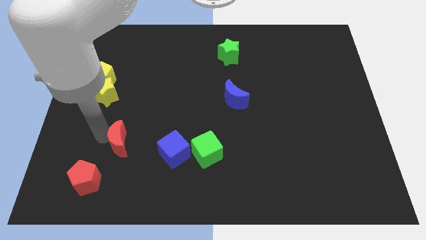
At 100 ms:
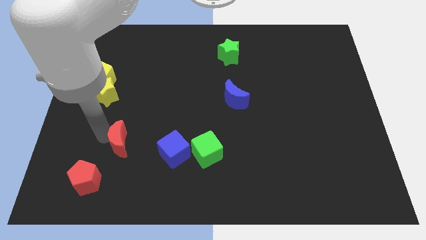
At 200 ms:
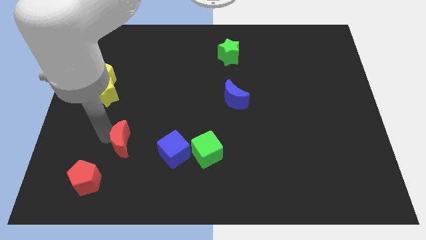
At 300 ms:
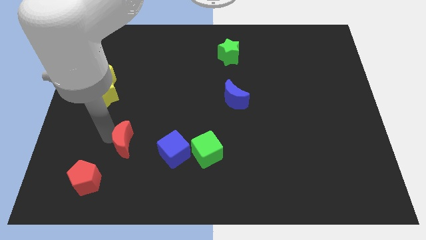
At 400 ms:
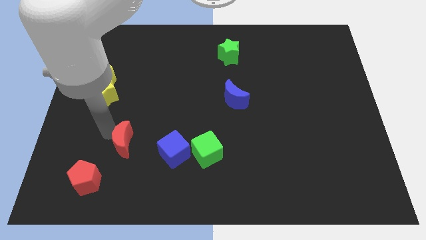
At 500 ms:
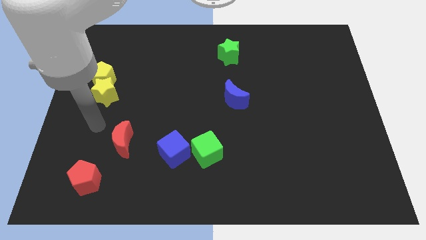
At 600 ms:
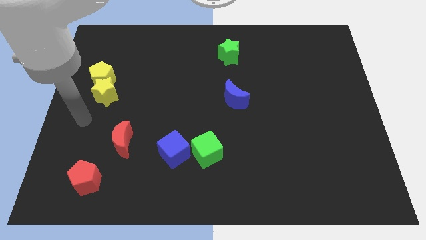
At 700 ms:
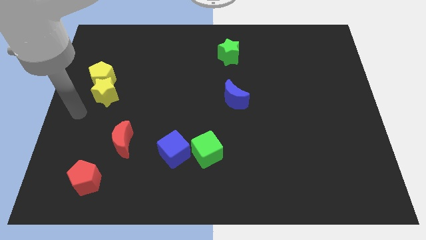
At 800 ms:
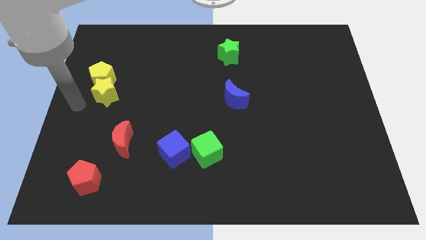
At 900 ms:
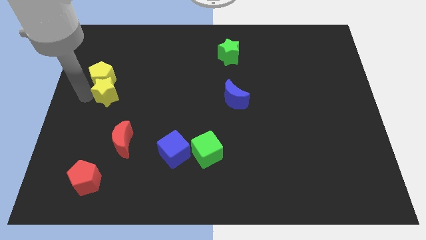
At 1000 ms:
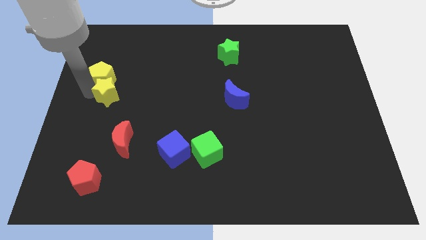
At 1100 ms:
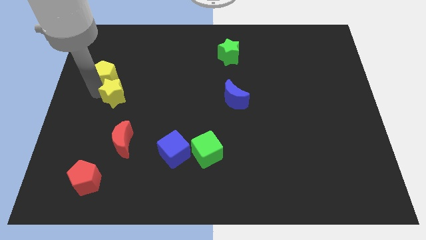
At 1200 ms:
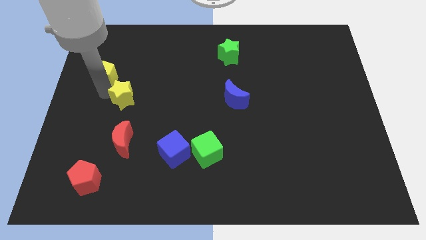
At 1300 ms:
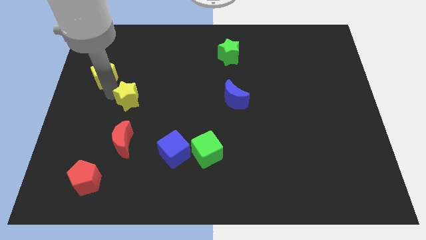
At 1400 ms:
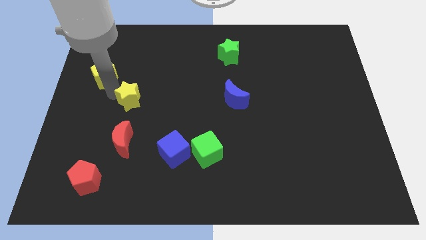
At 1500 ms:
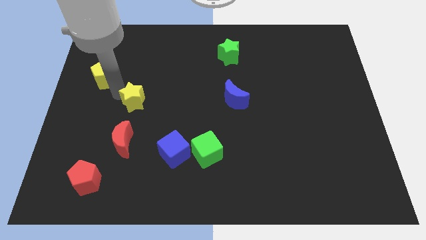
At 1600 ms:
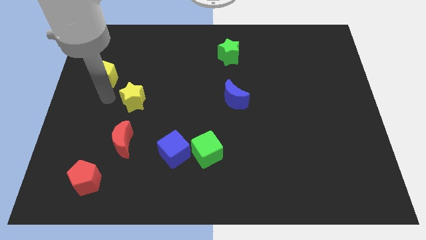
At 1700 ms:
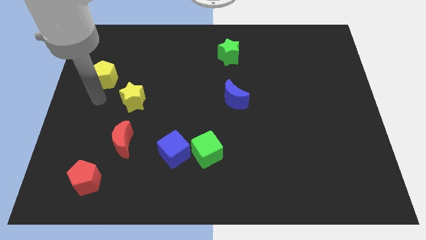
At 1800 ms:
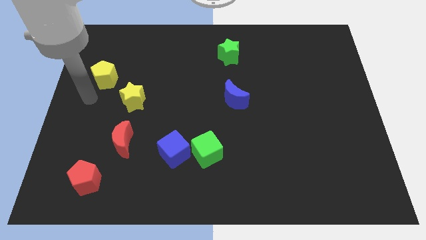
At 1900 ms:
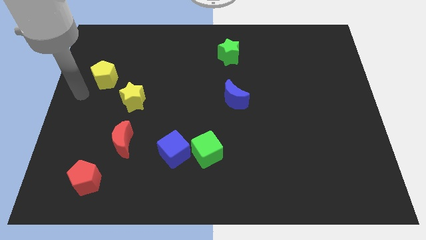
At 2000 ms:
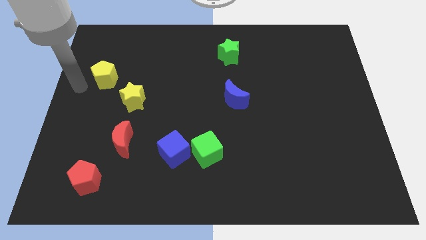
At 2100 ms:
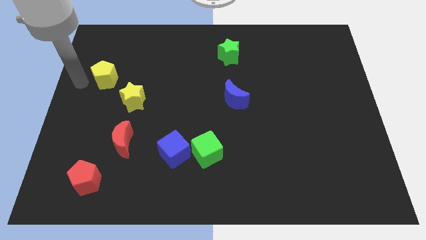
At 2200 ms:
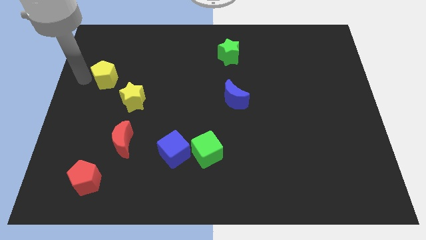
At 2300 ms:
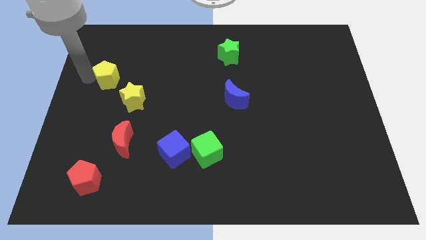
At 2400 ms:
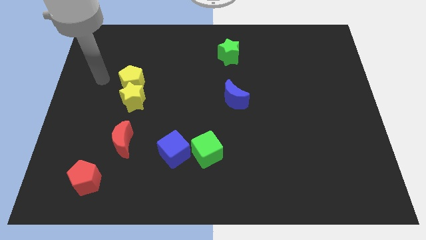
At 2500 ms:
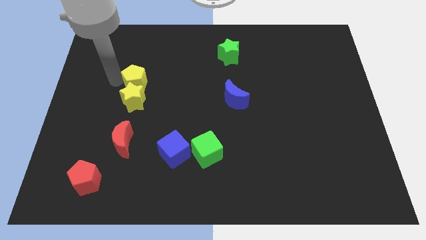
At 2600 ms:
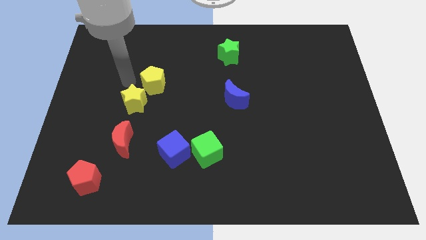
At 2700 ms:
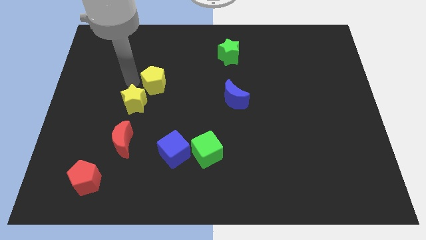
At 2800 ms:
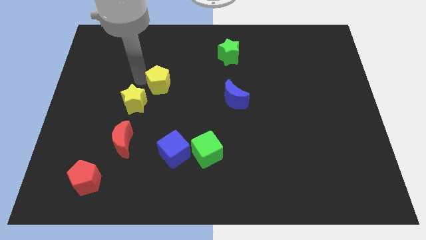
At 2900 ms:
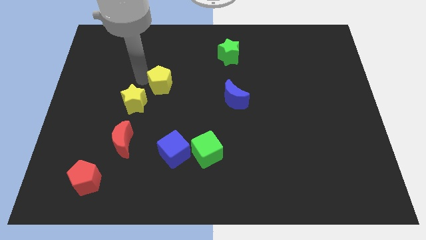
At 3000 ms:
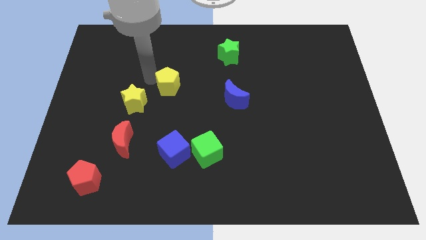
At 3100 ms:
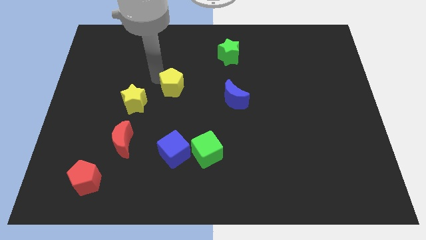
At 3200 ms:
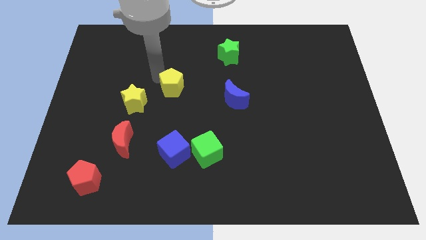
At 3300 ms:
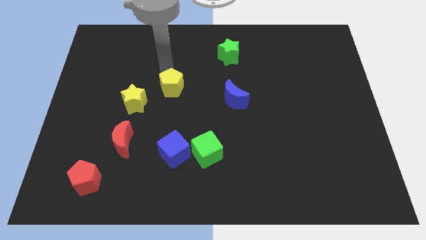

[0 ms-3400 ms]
place yellow pentagon above blue cube

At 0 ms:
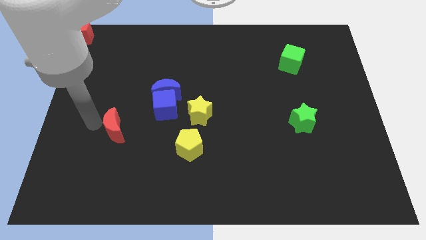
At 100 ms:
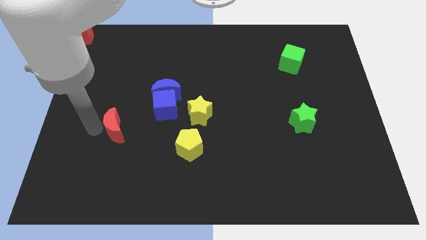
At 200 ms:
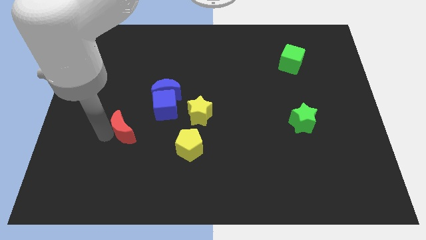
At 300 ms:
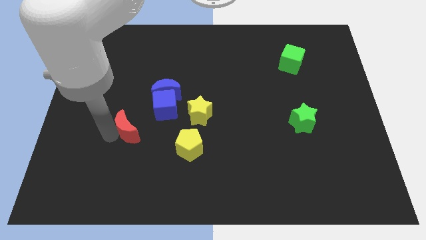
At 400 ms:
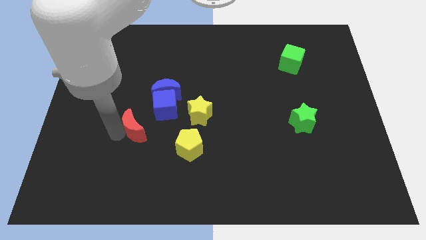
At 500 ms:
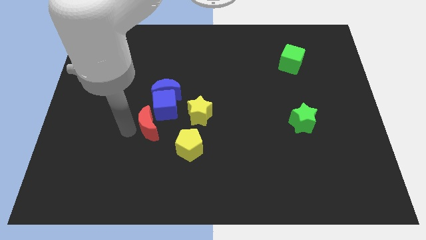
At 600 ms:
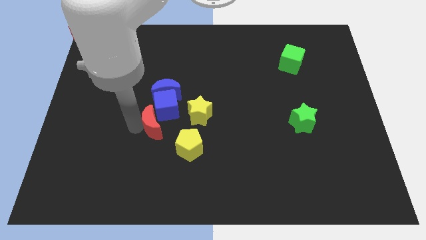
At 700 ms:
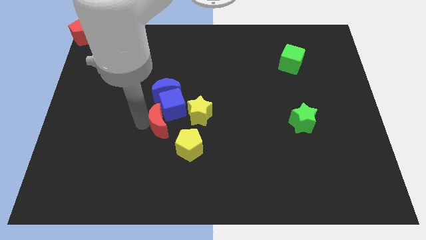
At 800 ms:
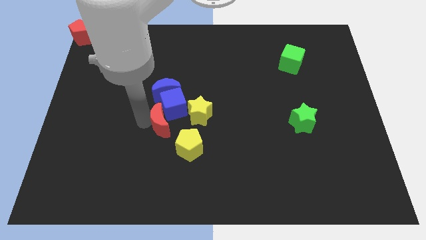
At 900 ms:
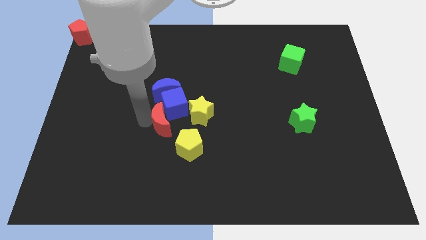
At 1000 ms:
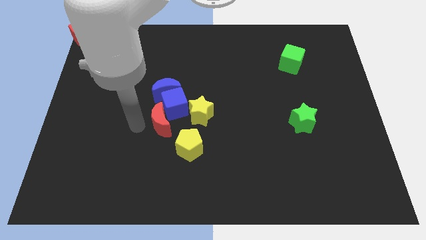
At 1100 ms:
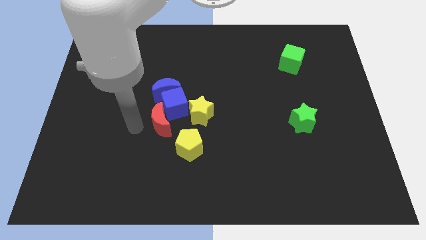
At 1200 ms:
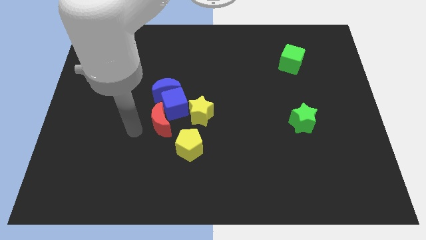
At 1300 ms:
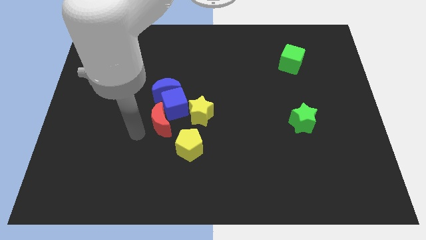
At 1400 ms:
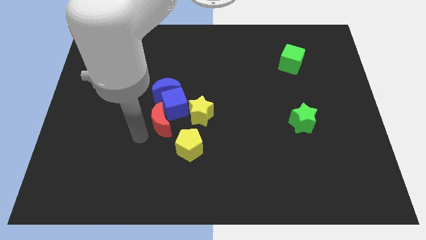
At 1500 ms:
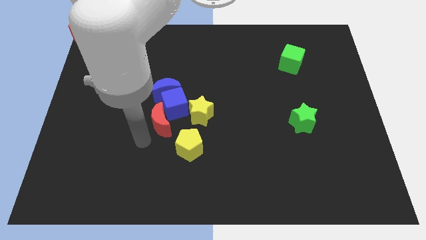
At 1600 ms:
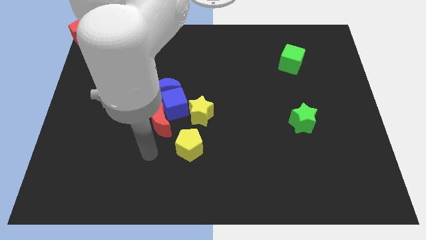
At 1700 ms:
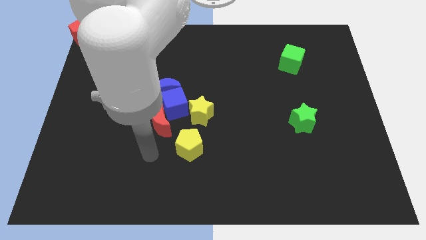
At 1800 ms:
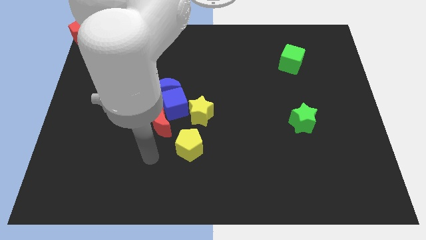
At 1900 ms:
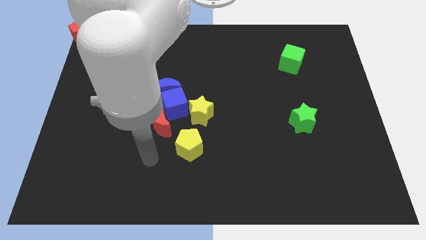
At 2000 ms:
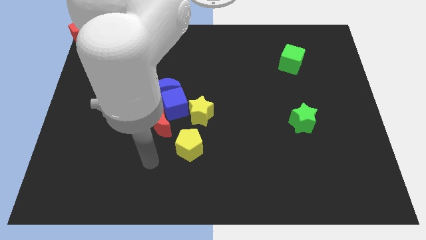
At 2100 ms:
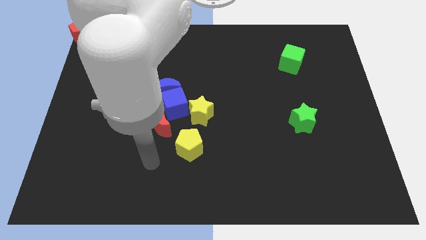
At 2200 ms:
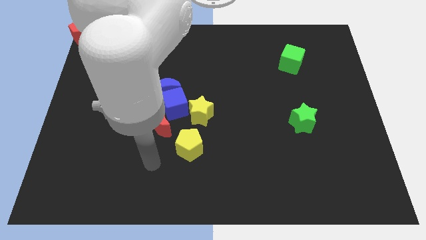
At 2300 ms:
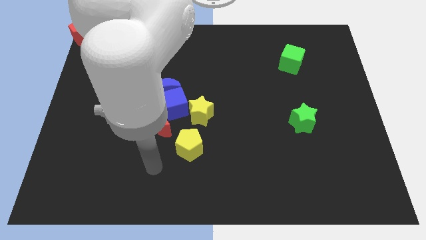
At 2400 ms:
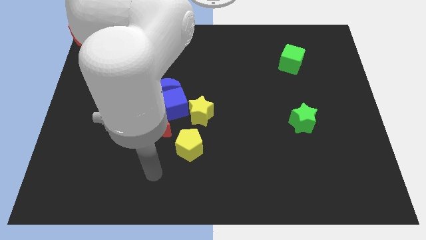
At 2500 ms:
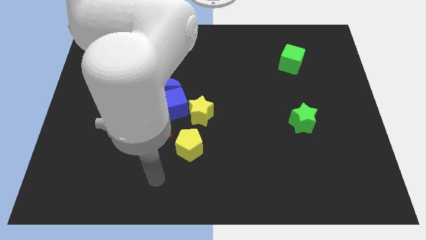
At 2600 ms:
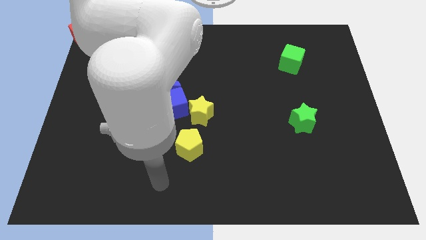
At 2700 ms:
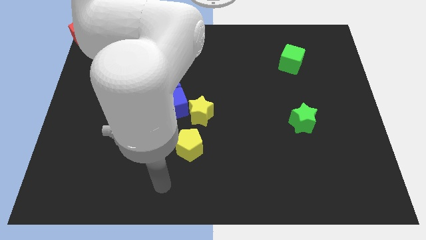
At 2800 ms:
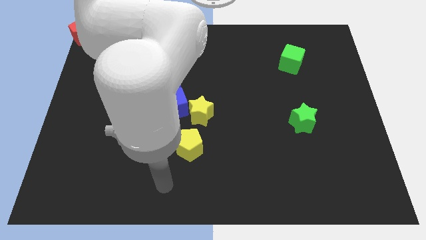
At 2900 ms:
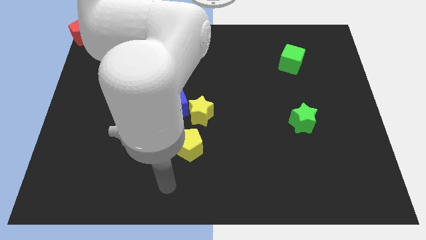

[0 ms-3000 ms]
push the red crescent into blue cube

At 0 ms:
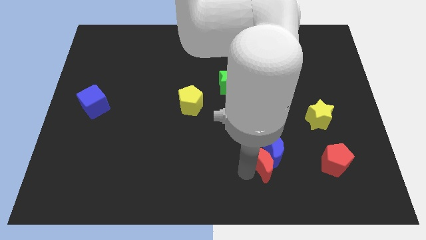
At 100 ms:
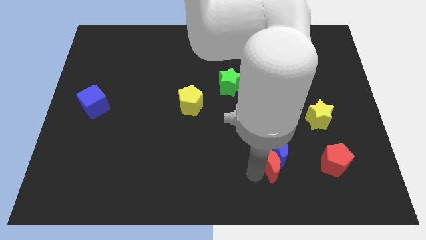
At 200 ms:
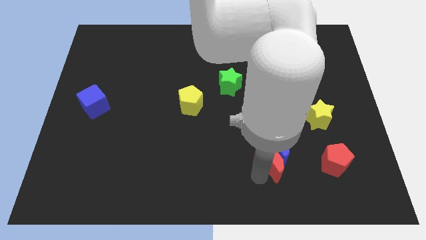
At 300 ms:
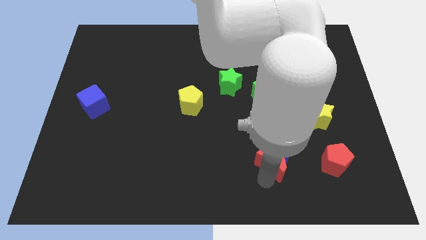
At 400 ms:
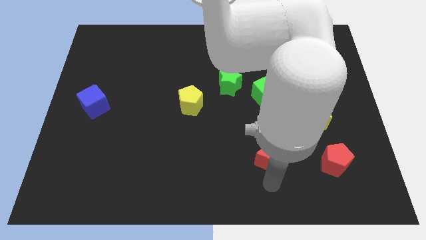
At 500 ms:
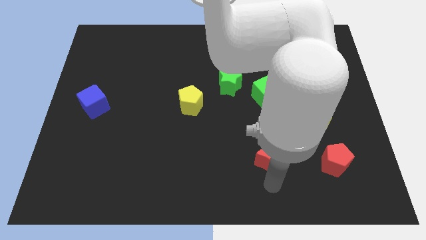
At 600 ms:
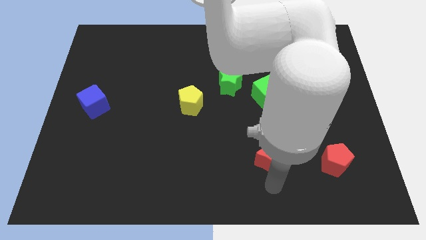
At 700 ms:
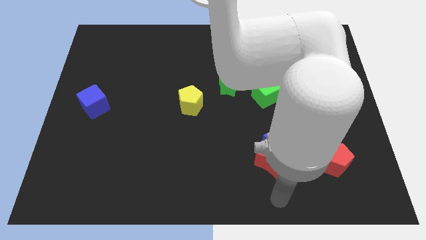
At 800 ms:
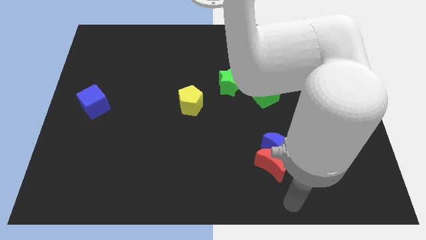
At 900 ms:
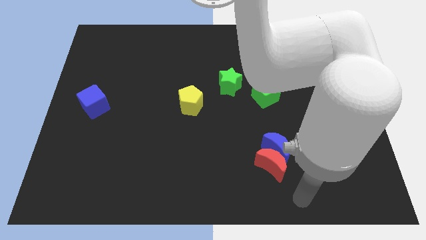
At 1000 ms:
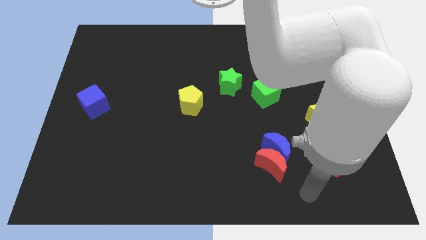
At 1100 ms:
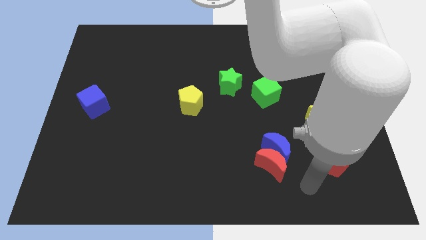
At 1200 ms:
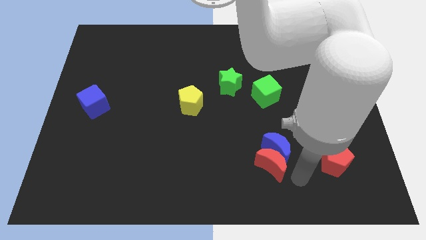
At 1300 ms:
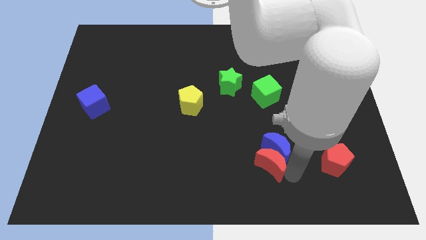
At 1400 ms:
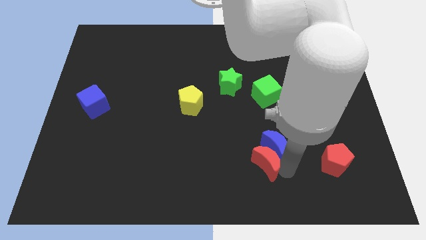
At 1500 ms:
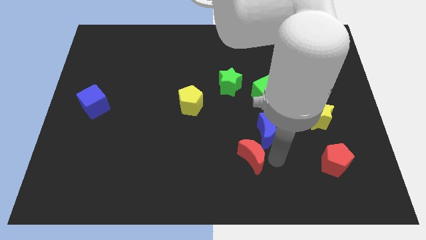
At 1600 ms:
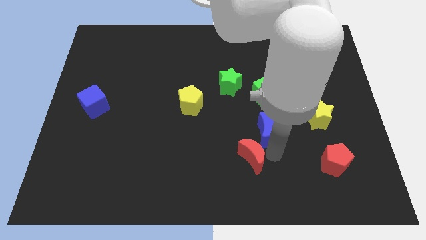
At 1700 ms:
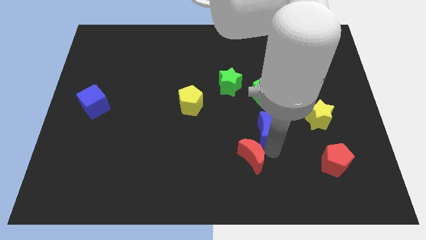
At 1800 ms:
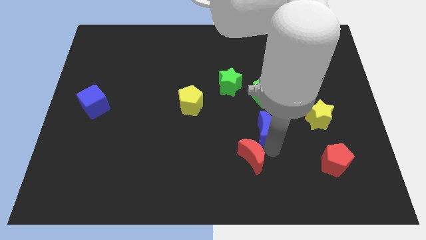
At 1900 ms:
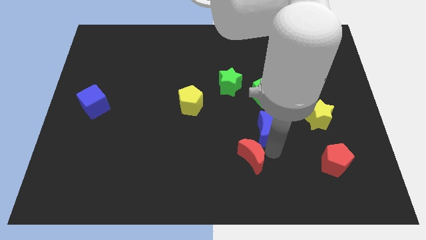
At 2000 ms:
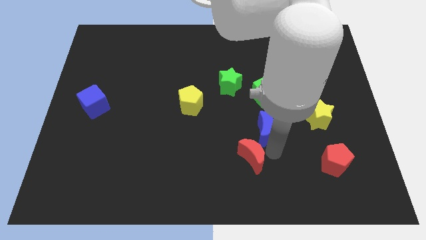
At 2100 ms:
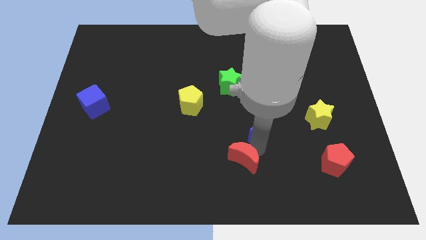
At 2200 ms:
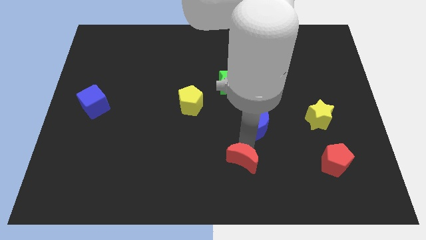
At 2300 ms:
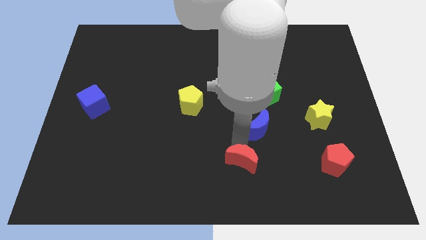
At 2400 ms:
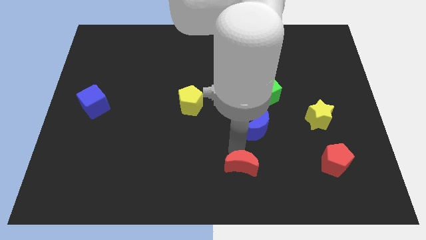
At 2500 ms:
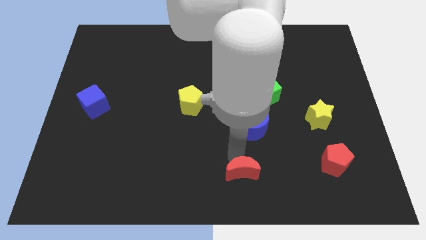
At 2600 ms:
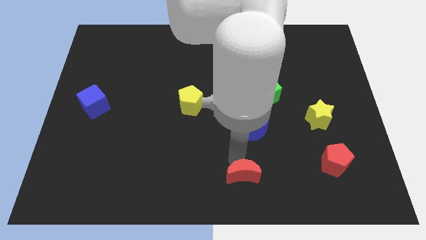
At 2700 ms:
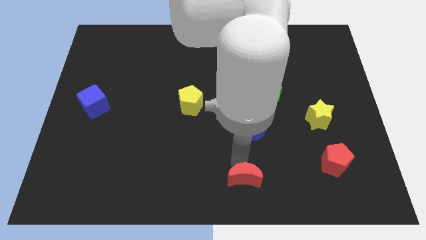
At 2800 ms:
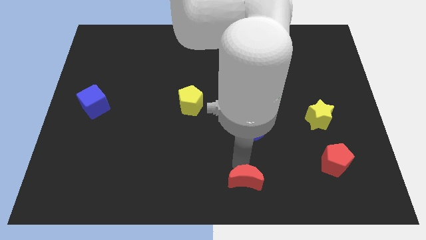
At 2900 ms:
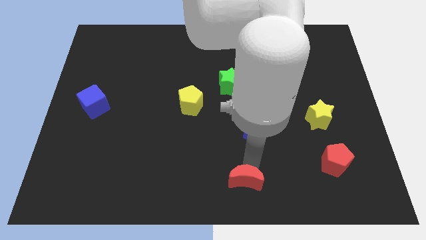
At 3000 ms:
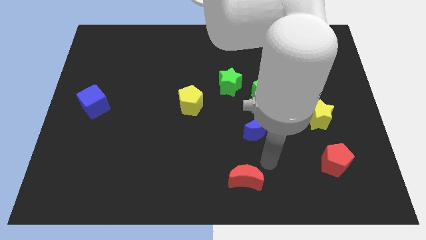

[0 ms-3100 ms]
separate the red moon and blue moon from each other
